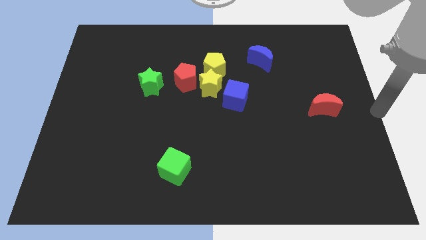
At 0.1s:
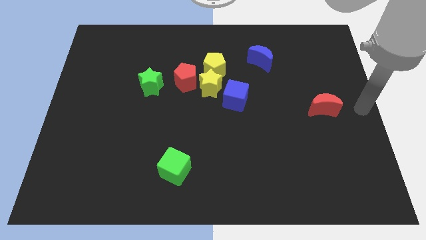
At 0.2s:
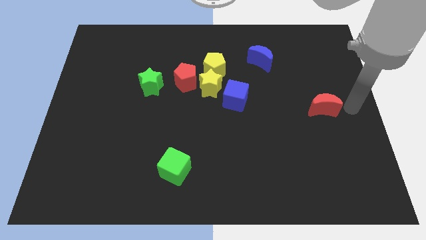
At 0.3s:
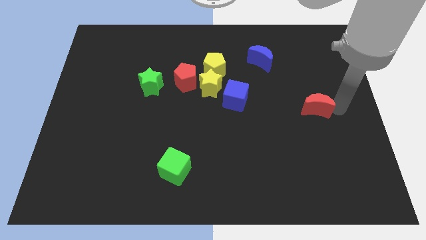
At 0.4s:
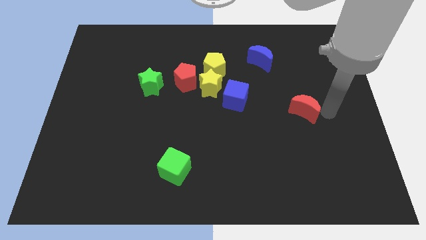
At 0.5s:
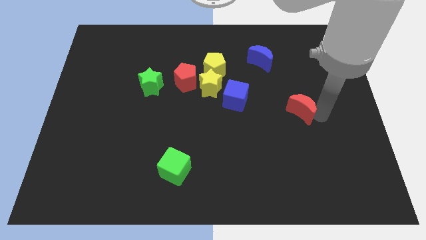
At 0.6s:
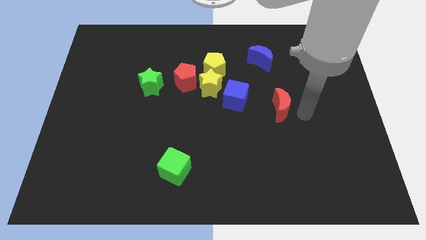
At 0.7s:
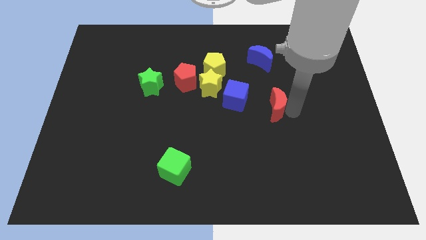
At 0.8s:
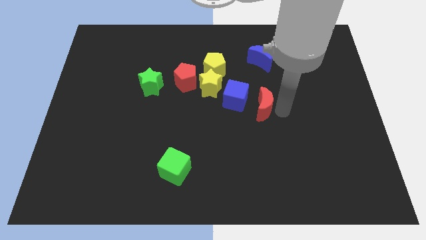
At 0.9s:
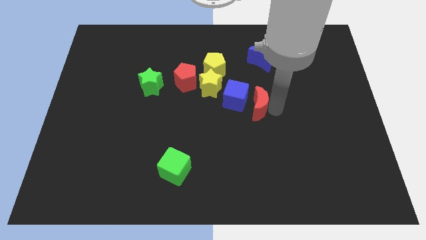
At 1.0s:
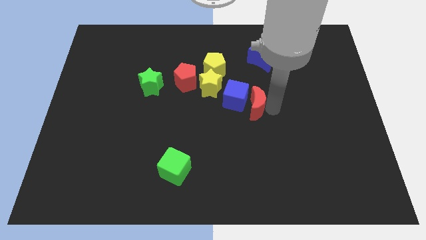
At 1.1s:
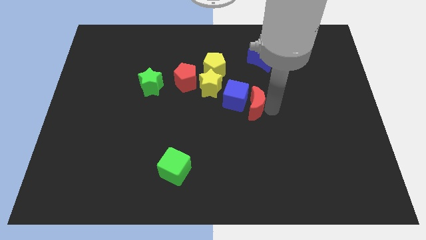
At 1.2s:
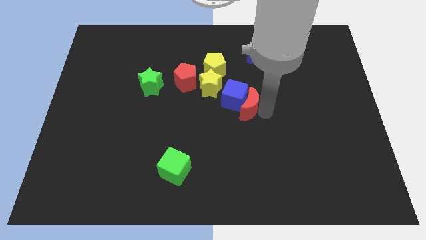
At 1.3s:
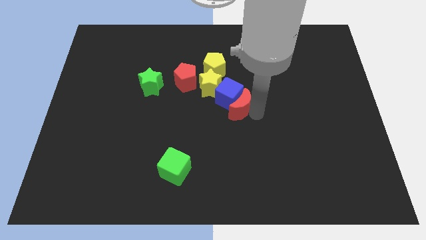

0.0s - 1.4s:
move the red crescent into the blue cube

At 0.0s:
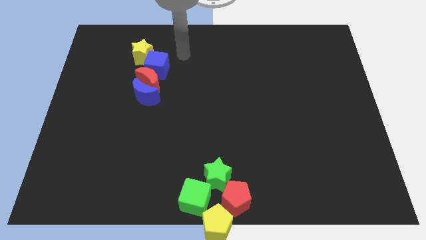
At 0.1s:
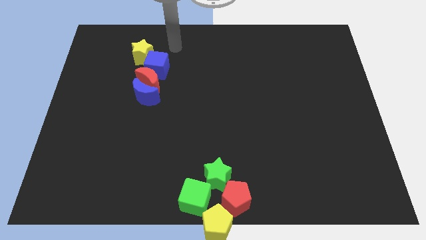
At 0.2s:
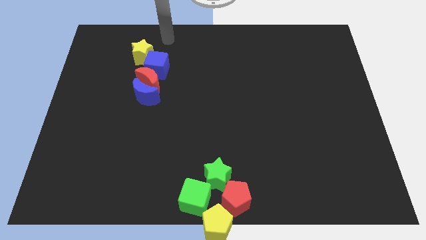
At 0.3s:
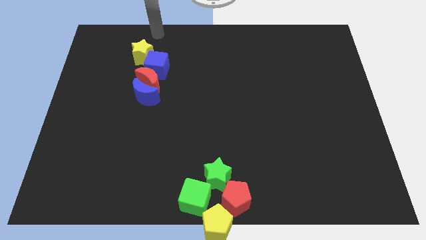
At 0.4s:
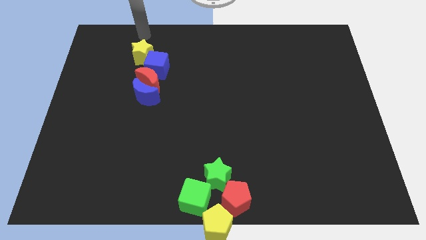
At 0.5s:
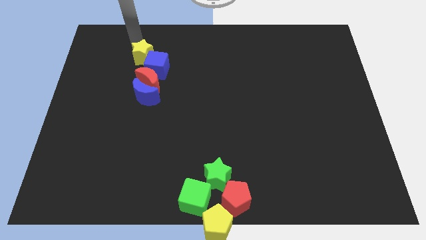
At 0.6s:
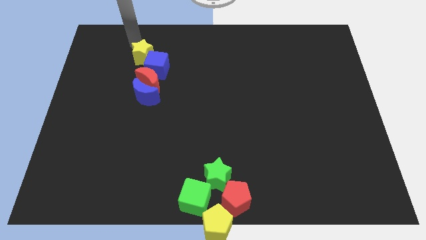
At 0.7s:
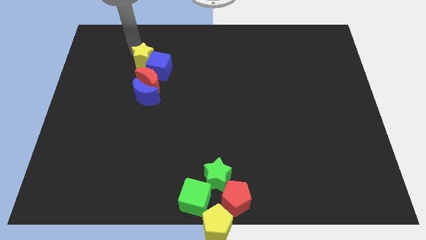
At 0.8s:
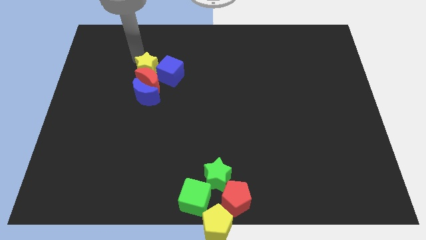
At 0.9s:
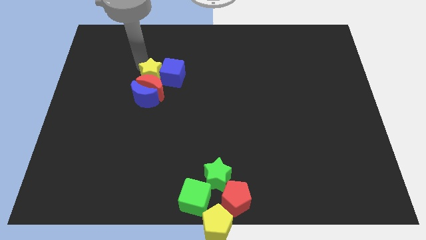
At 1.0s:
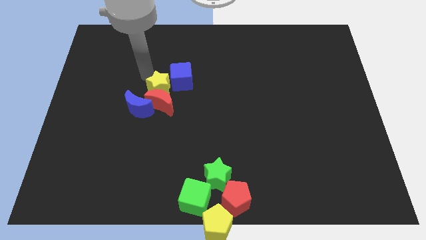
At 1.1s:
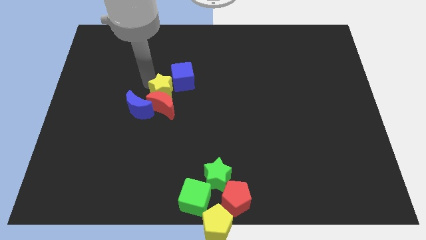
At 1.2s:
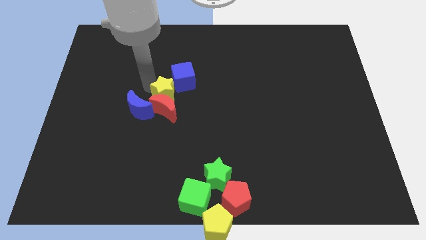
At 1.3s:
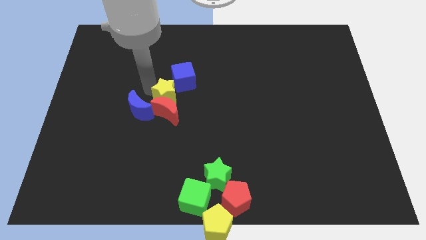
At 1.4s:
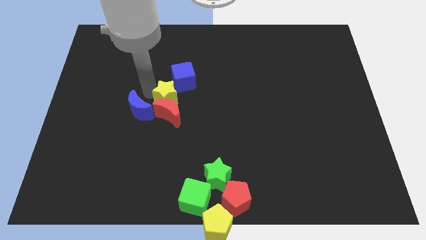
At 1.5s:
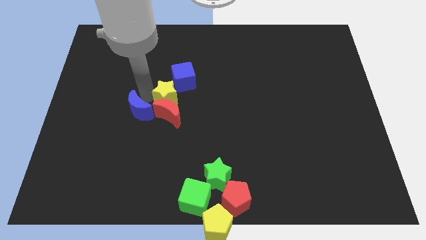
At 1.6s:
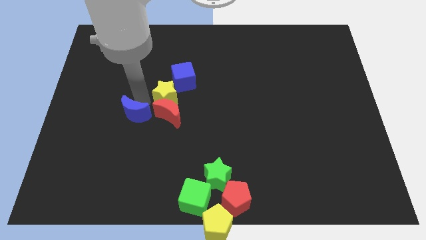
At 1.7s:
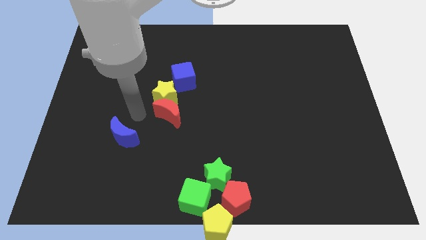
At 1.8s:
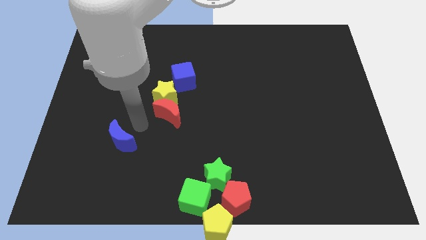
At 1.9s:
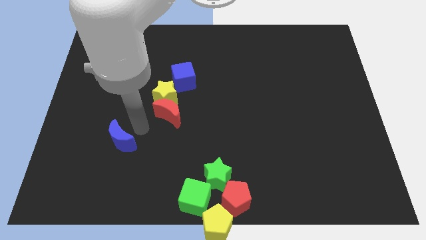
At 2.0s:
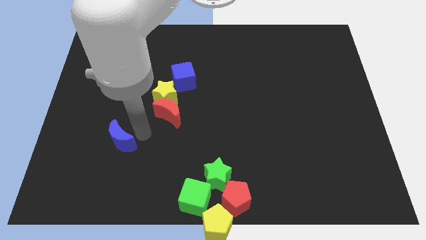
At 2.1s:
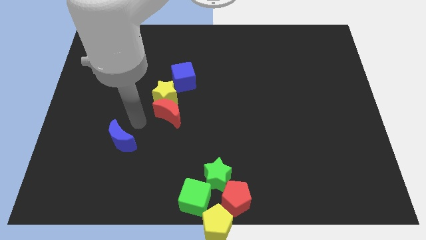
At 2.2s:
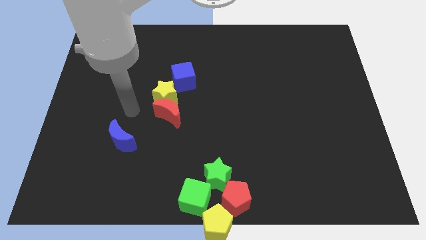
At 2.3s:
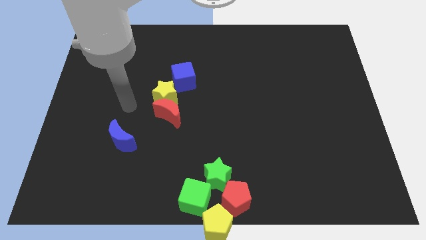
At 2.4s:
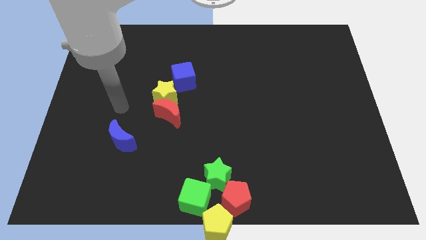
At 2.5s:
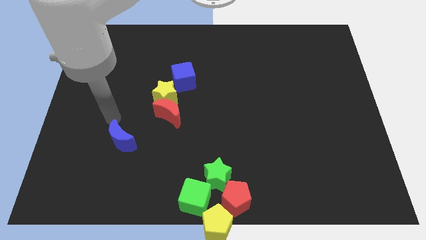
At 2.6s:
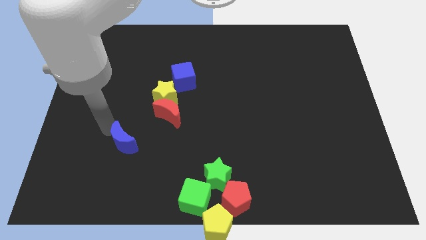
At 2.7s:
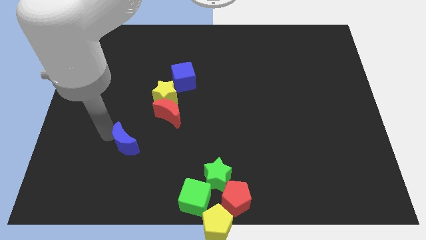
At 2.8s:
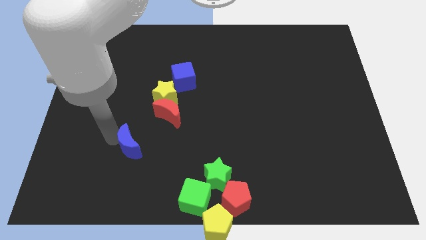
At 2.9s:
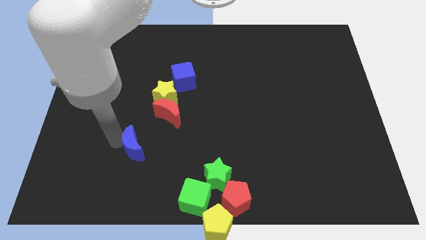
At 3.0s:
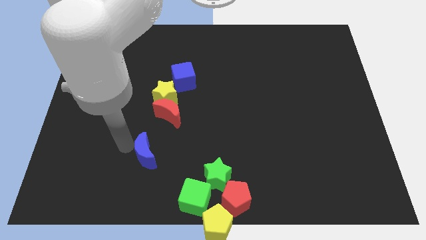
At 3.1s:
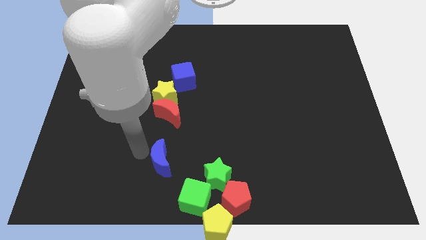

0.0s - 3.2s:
touch the group of blocks

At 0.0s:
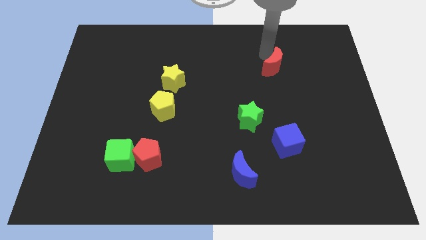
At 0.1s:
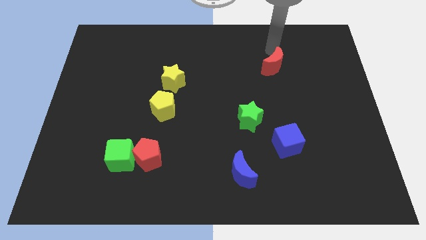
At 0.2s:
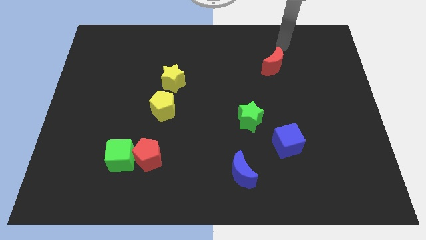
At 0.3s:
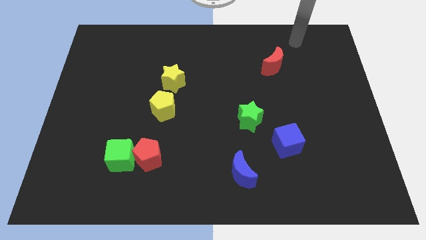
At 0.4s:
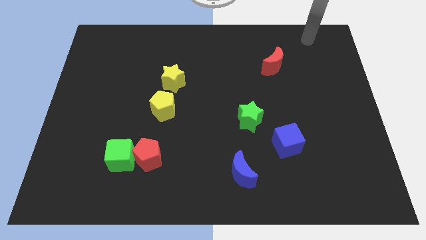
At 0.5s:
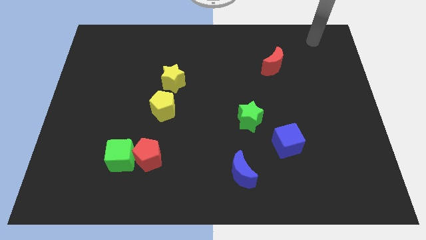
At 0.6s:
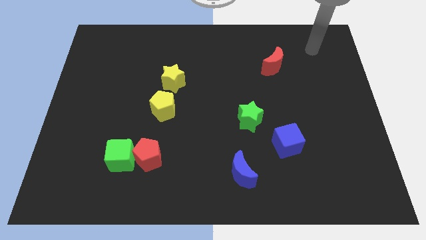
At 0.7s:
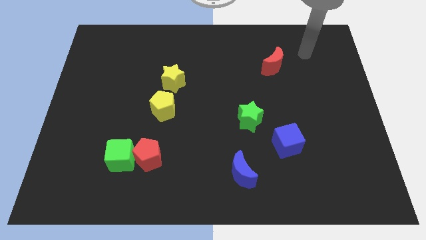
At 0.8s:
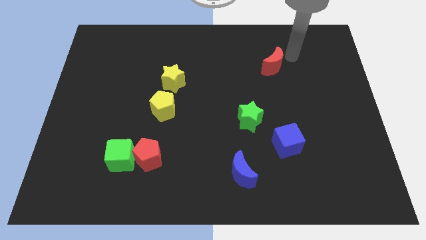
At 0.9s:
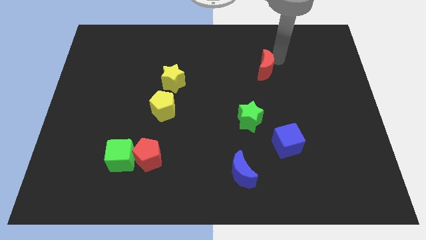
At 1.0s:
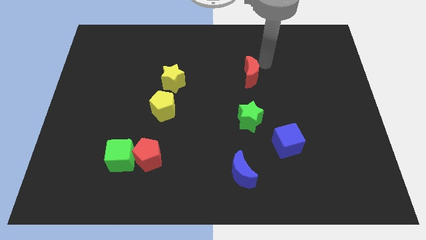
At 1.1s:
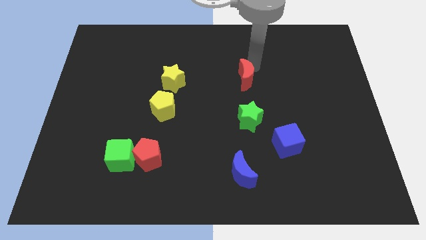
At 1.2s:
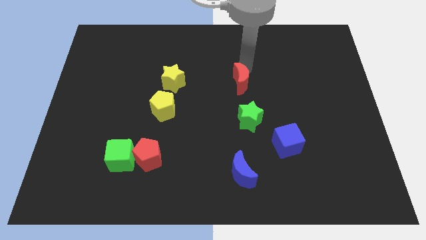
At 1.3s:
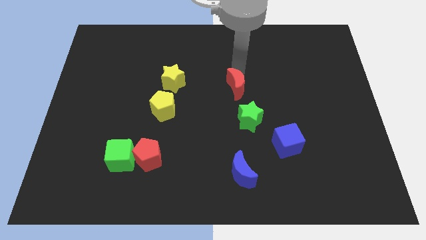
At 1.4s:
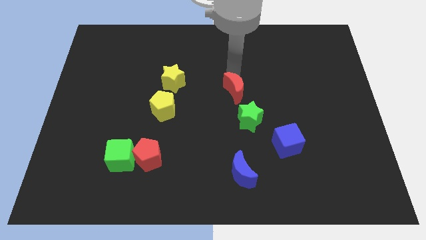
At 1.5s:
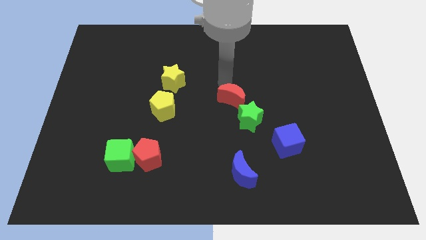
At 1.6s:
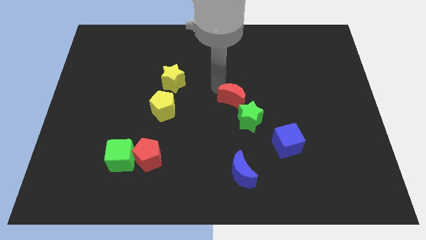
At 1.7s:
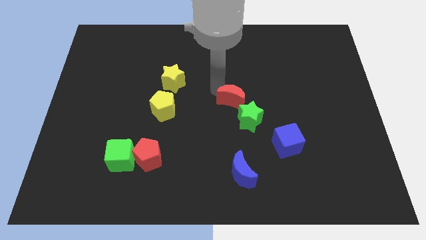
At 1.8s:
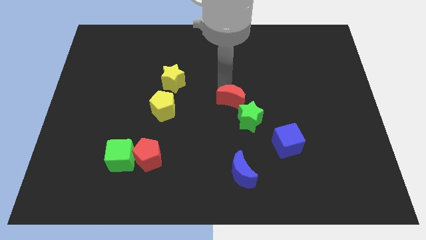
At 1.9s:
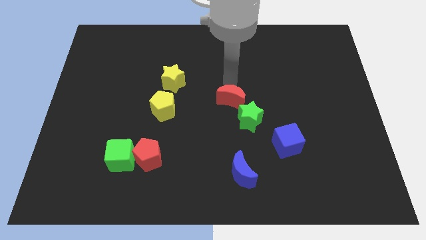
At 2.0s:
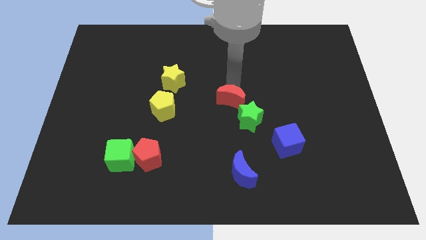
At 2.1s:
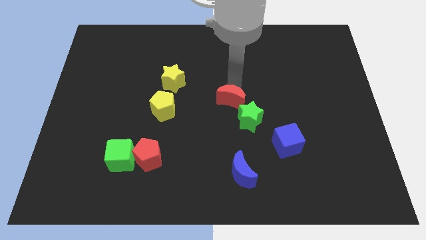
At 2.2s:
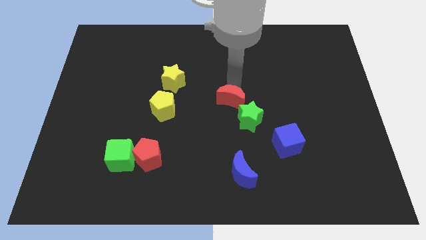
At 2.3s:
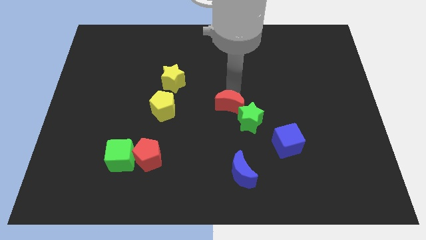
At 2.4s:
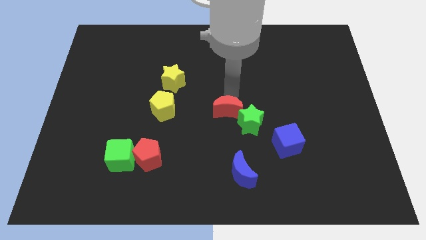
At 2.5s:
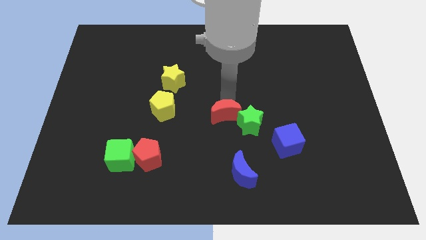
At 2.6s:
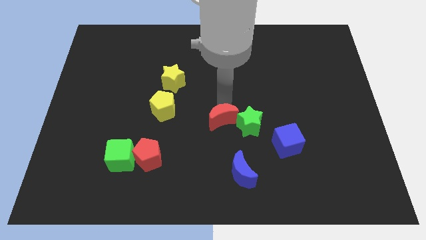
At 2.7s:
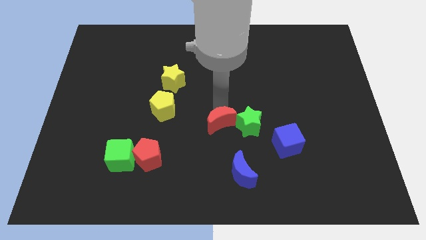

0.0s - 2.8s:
place the red moon in between the green star and yellow pentagon

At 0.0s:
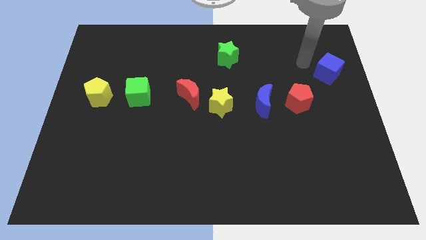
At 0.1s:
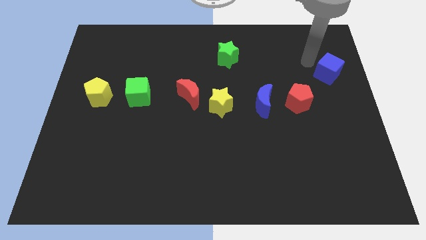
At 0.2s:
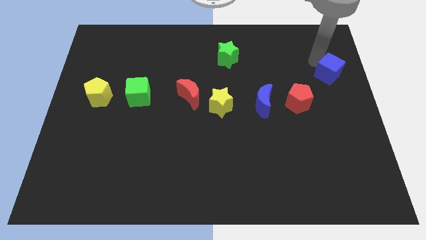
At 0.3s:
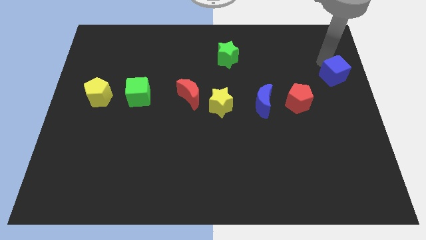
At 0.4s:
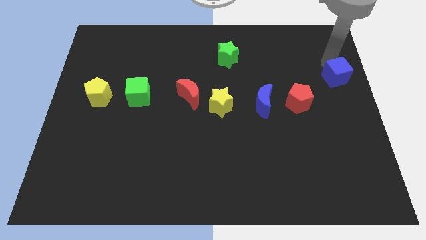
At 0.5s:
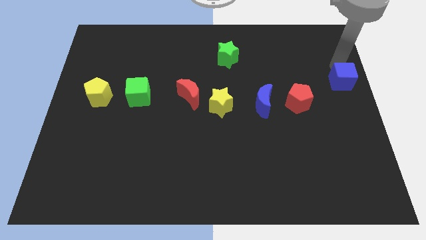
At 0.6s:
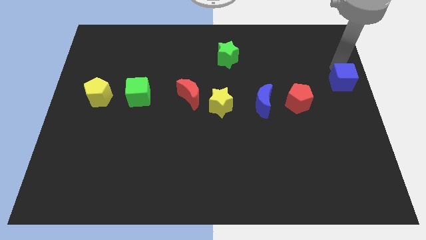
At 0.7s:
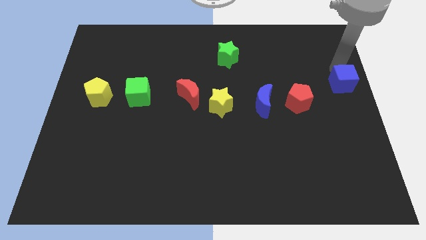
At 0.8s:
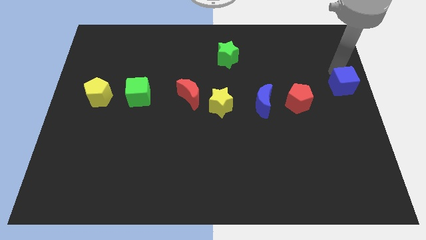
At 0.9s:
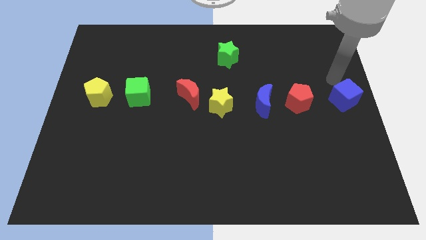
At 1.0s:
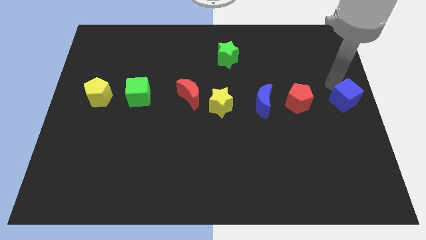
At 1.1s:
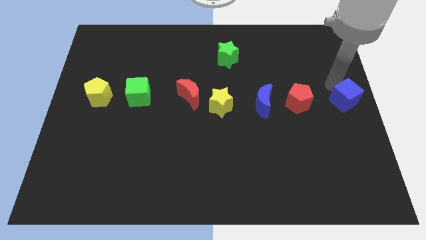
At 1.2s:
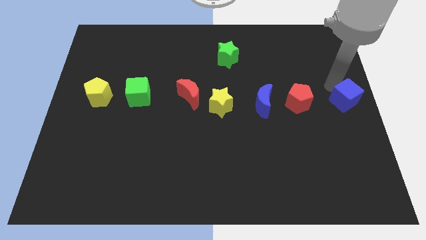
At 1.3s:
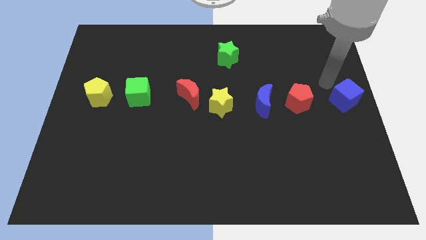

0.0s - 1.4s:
move blue cube to right center

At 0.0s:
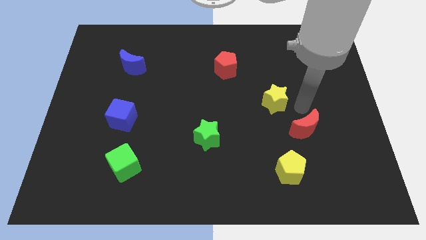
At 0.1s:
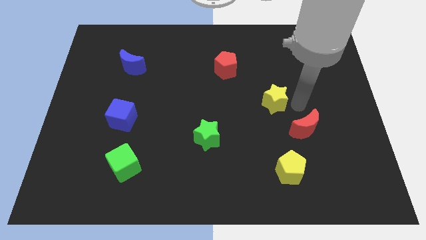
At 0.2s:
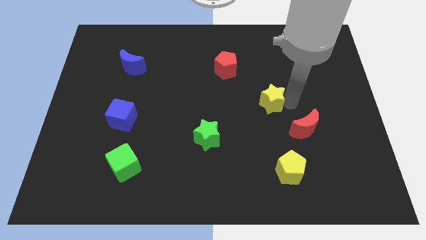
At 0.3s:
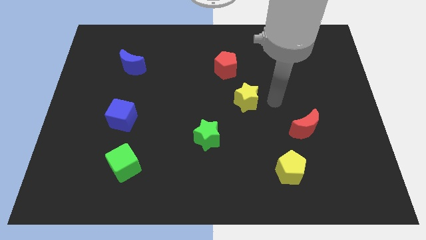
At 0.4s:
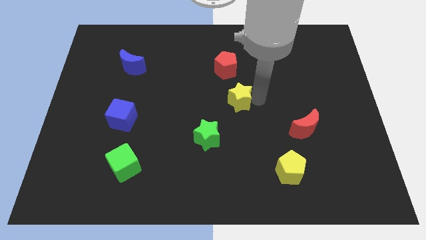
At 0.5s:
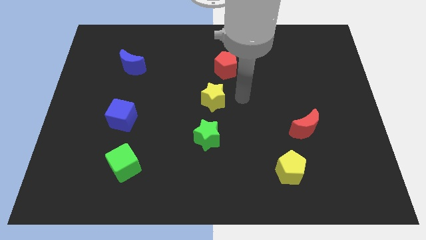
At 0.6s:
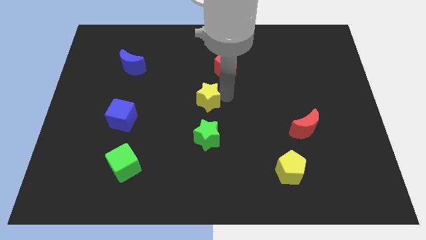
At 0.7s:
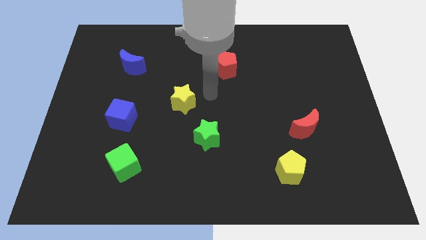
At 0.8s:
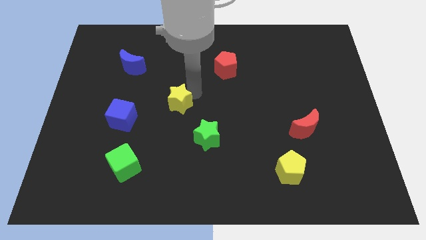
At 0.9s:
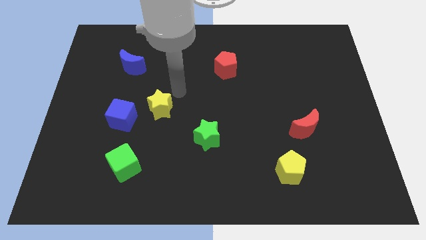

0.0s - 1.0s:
move the yellow star diagonally to the green star
